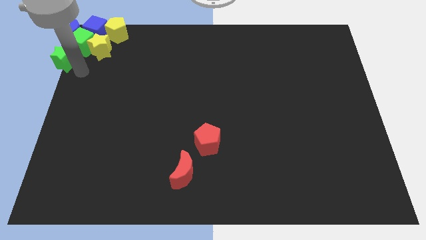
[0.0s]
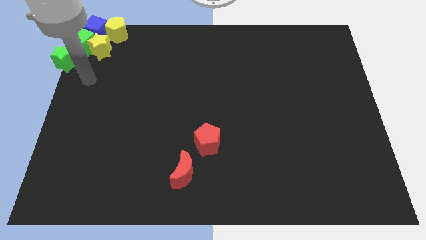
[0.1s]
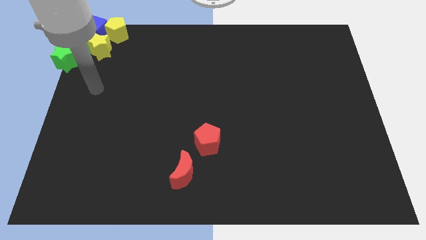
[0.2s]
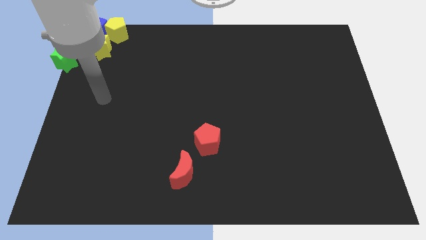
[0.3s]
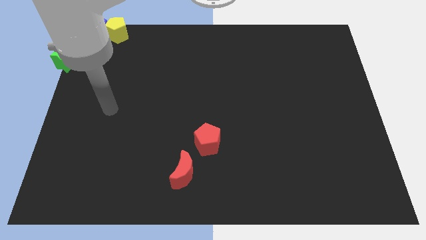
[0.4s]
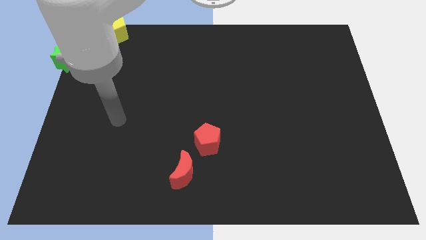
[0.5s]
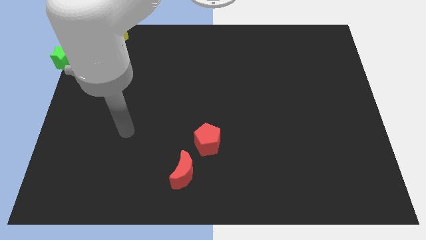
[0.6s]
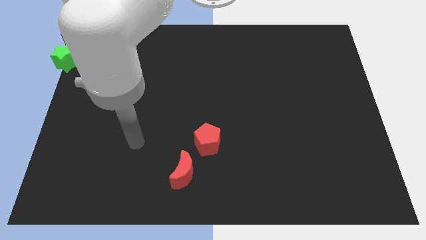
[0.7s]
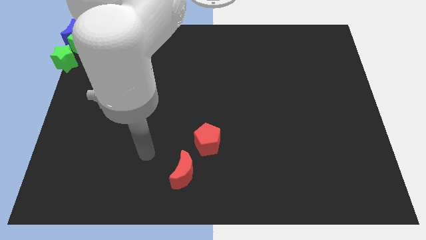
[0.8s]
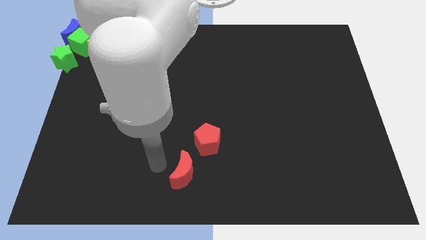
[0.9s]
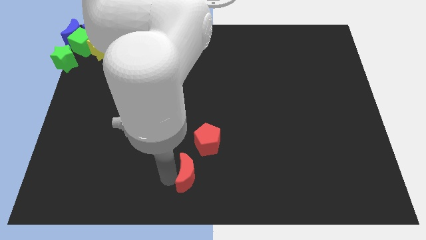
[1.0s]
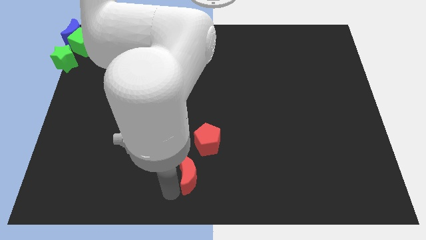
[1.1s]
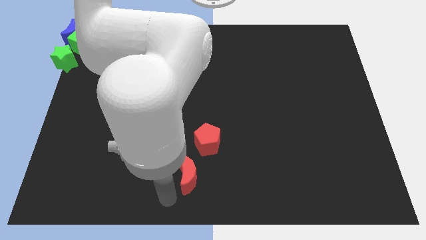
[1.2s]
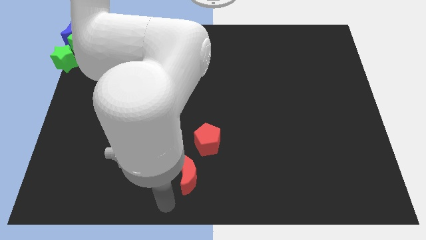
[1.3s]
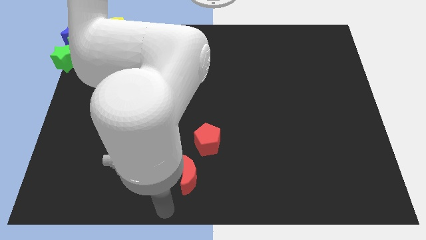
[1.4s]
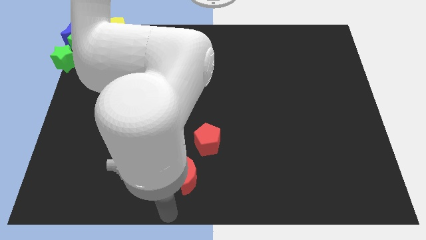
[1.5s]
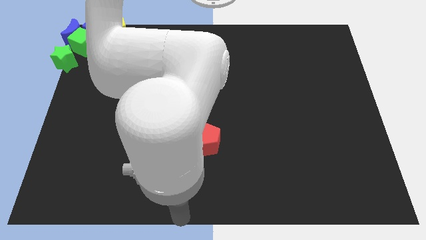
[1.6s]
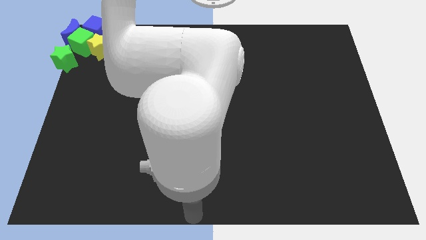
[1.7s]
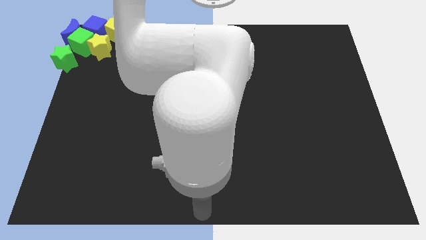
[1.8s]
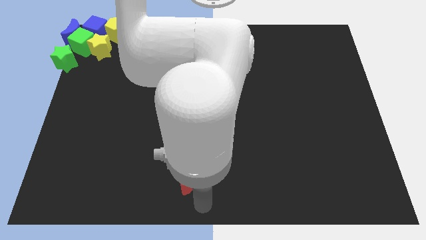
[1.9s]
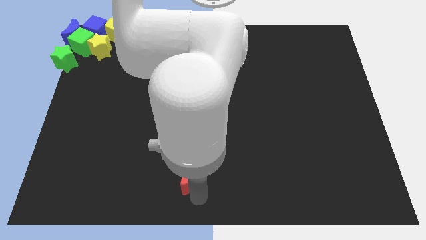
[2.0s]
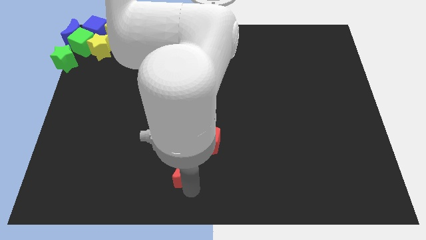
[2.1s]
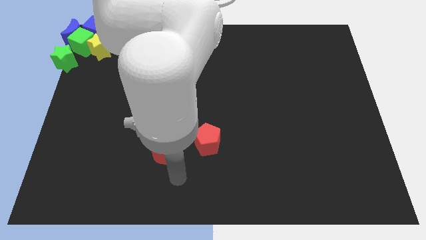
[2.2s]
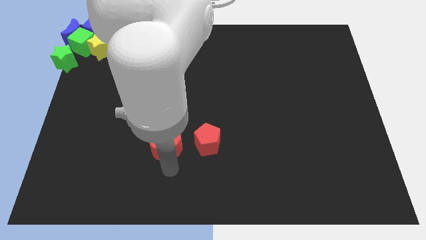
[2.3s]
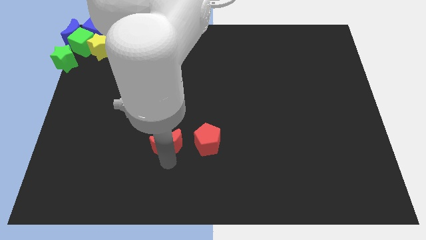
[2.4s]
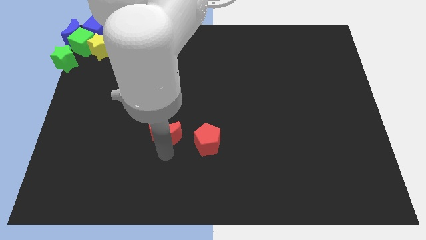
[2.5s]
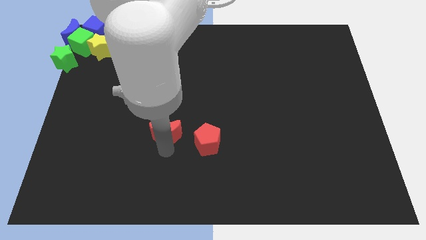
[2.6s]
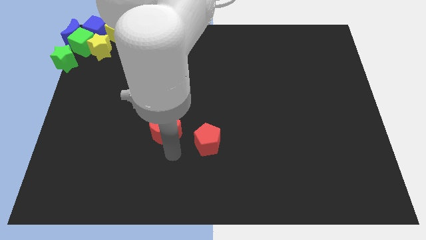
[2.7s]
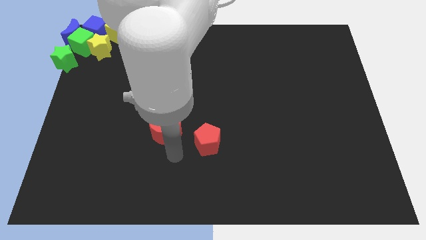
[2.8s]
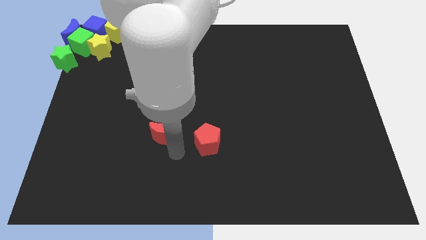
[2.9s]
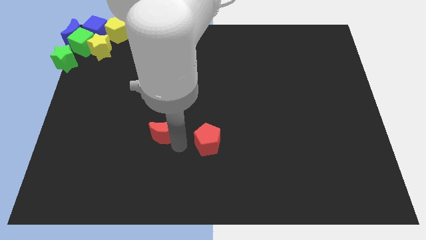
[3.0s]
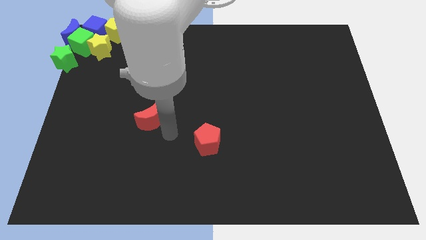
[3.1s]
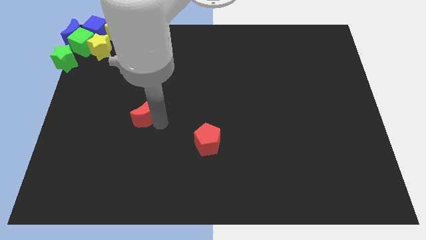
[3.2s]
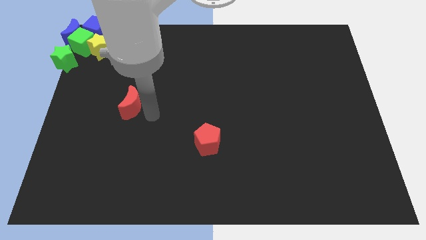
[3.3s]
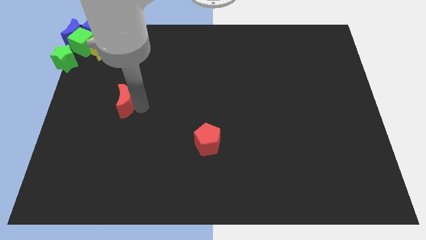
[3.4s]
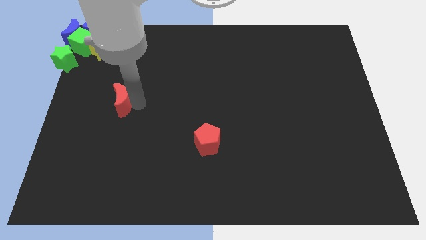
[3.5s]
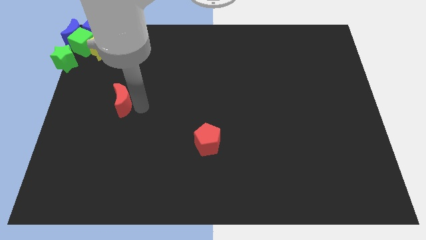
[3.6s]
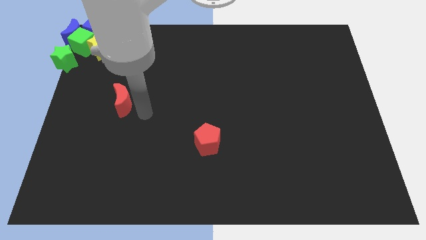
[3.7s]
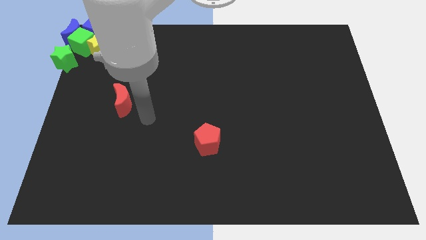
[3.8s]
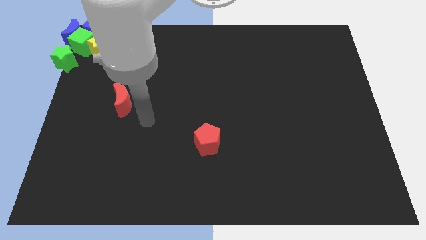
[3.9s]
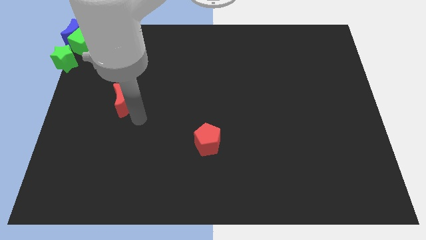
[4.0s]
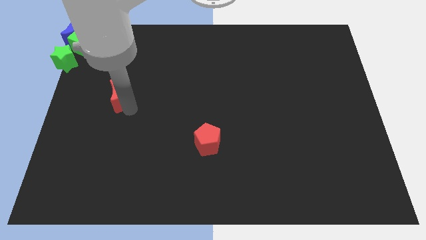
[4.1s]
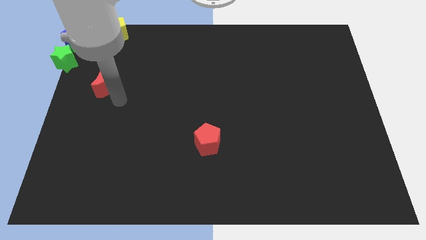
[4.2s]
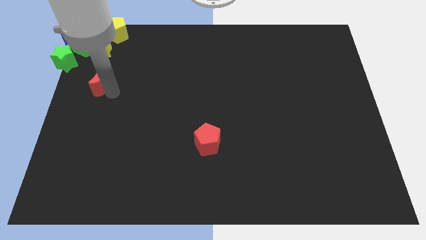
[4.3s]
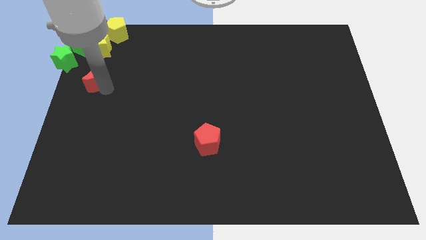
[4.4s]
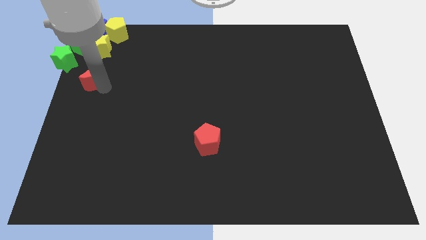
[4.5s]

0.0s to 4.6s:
put the red moon at the bottom of yellow star

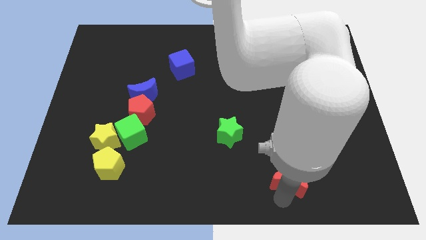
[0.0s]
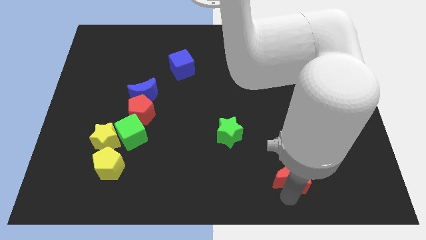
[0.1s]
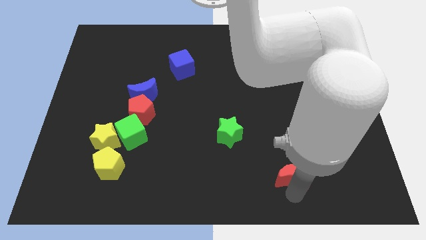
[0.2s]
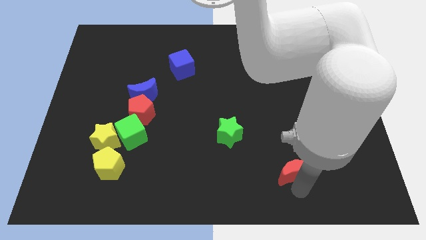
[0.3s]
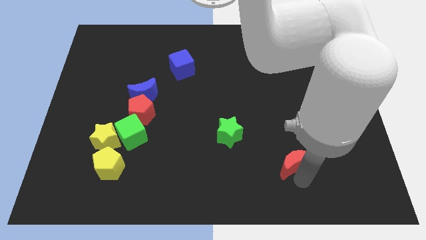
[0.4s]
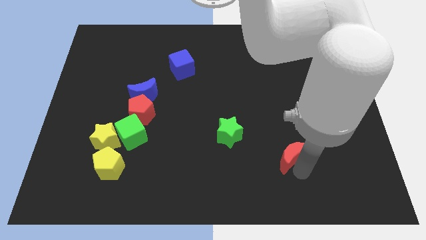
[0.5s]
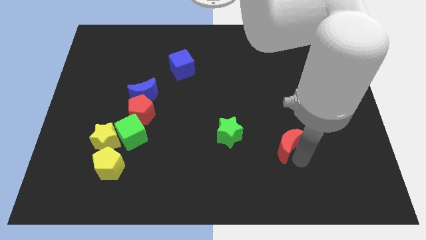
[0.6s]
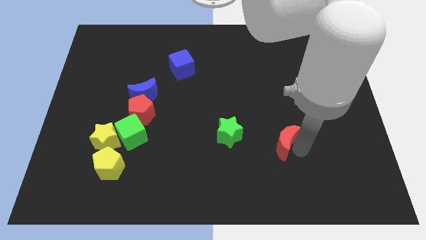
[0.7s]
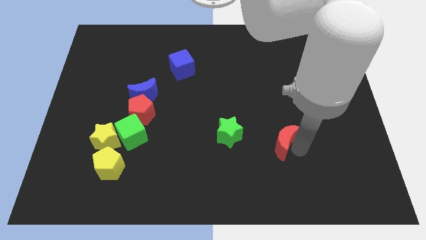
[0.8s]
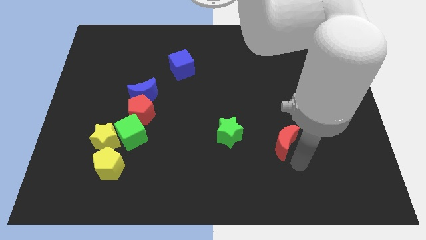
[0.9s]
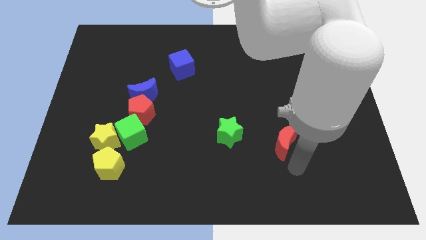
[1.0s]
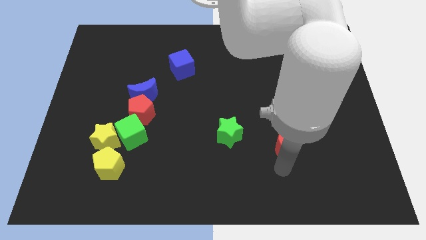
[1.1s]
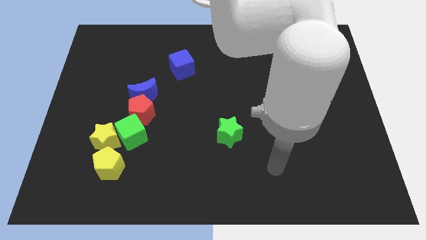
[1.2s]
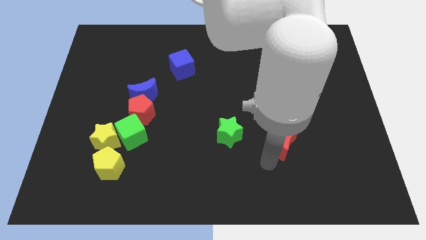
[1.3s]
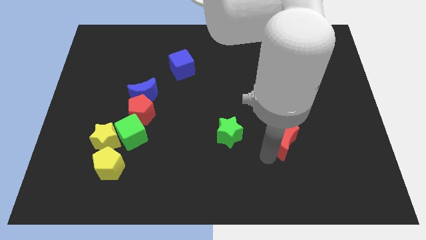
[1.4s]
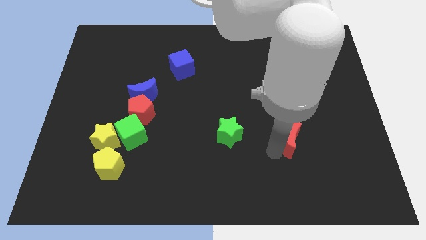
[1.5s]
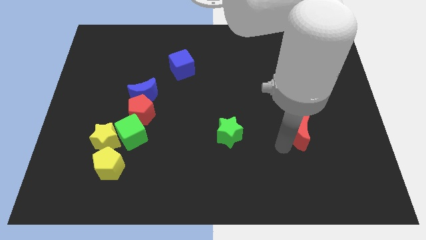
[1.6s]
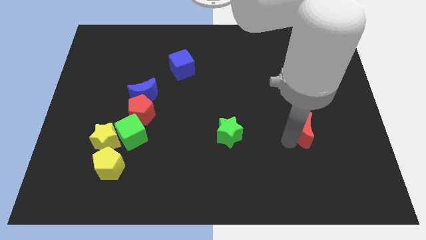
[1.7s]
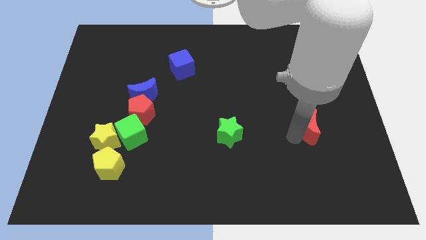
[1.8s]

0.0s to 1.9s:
place the red moon to the right of the green star

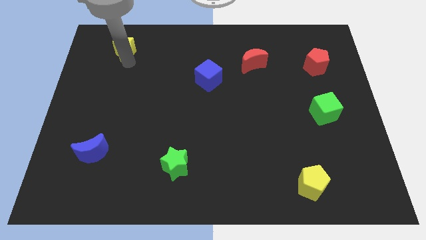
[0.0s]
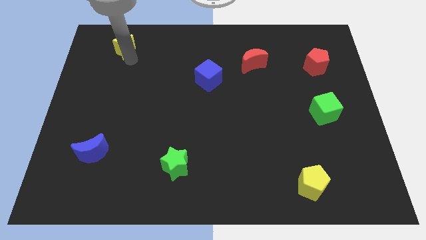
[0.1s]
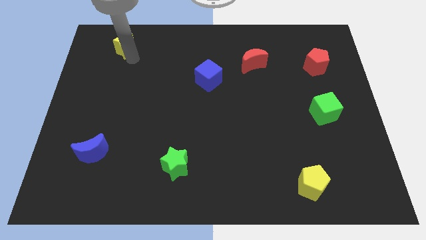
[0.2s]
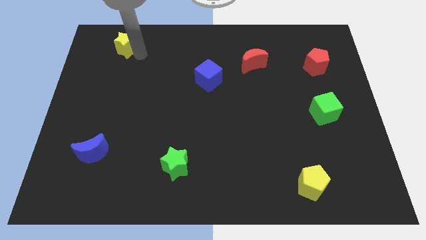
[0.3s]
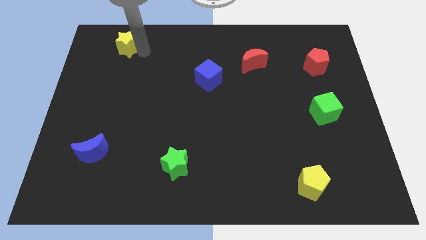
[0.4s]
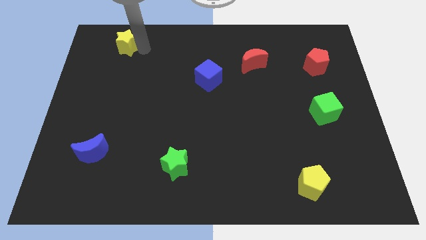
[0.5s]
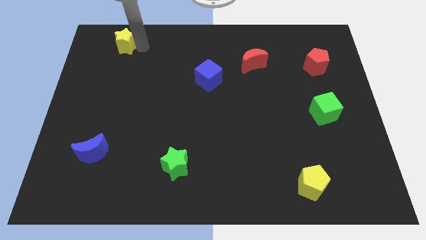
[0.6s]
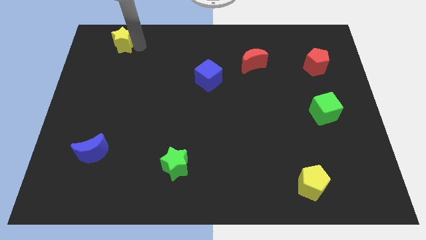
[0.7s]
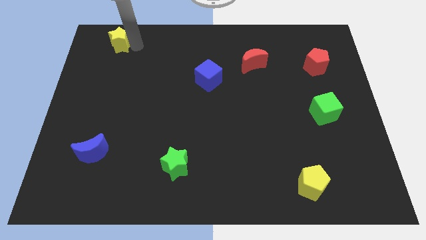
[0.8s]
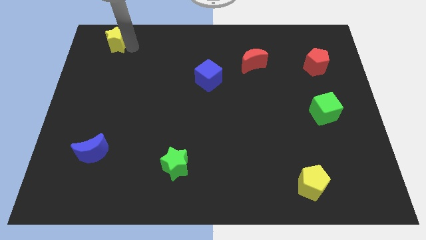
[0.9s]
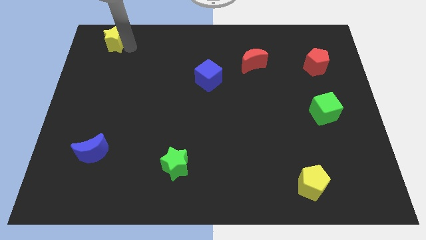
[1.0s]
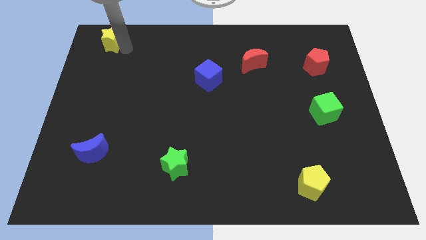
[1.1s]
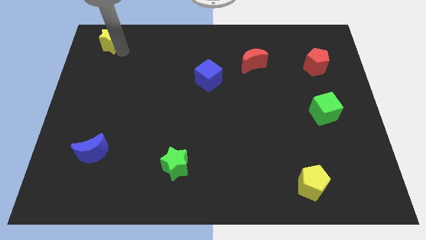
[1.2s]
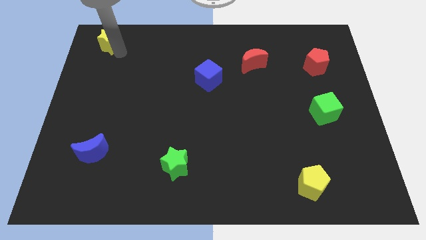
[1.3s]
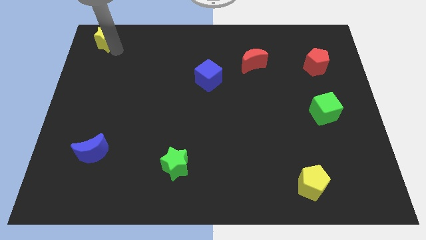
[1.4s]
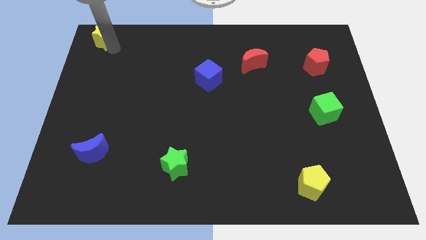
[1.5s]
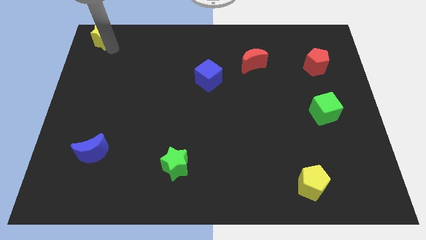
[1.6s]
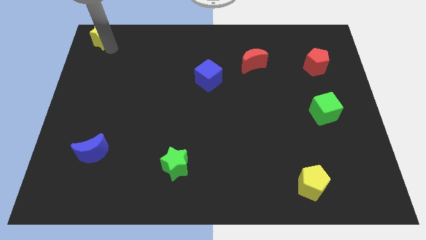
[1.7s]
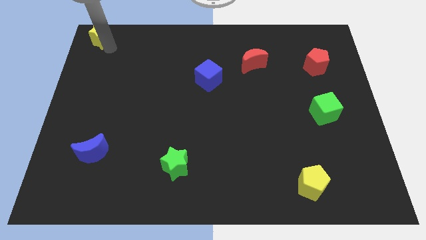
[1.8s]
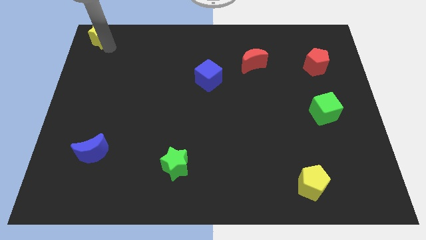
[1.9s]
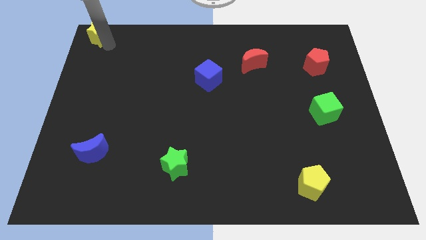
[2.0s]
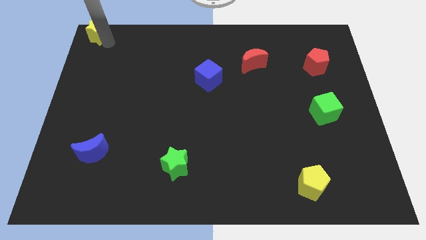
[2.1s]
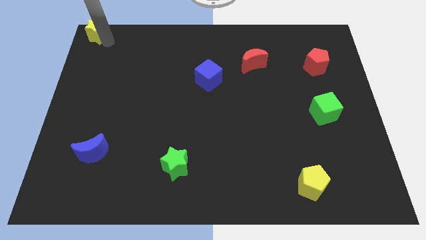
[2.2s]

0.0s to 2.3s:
push the yellow star to the top left corner of the board

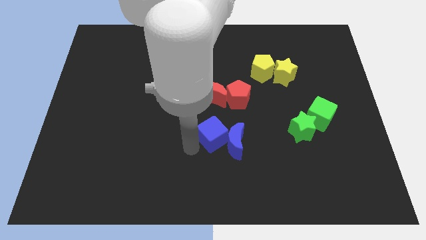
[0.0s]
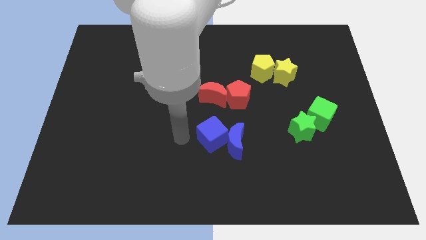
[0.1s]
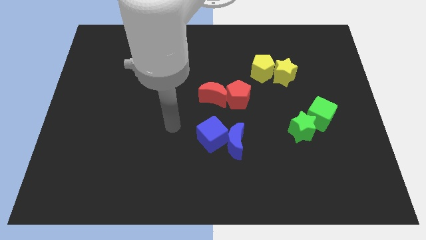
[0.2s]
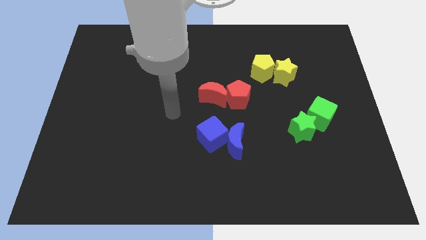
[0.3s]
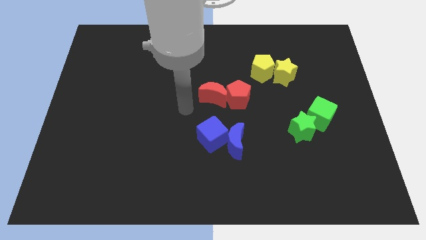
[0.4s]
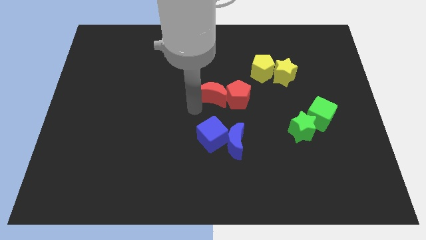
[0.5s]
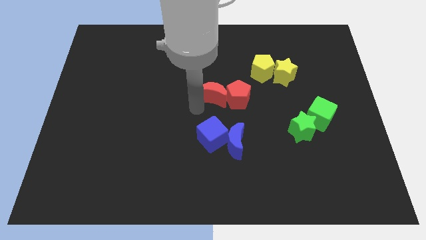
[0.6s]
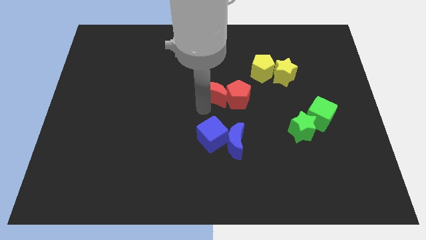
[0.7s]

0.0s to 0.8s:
point your arm at the bottom of red moon
